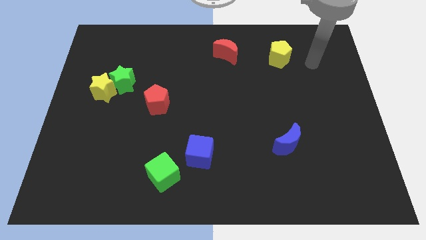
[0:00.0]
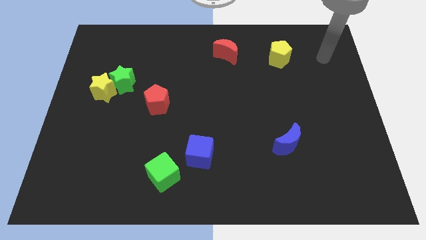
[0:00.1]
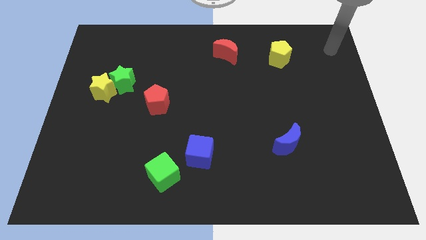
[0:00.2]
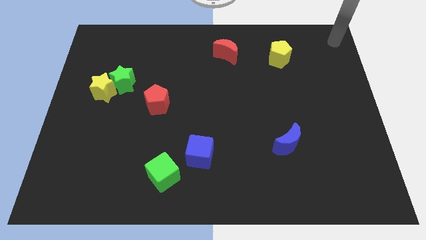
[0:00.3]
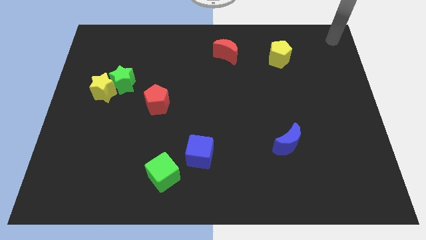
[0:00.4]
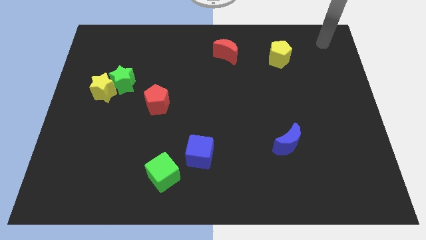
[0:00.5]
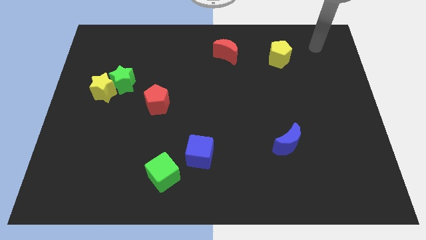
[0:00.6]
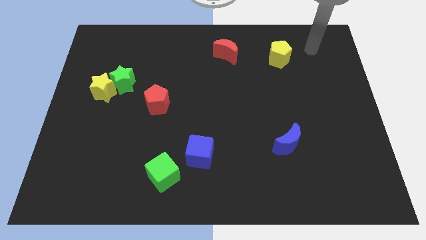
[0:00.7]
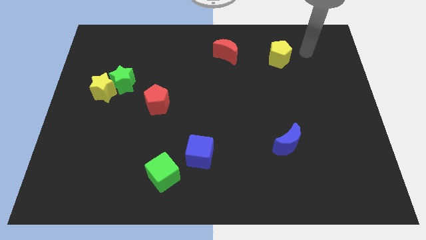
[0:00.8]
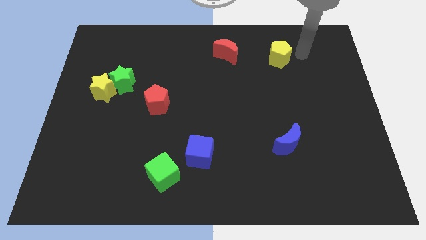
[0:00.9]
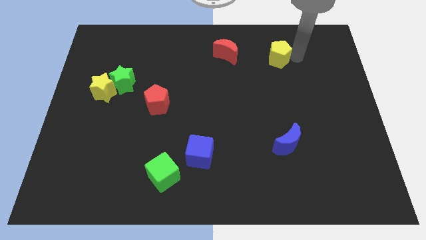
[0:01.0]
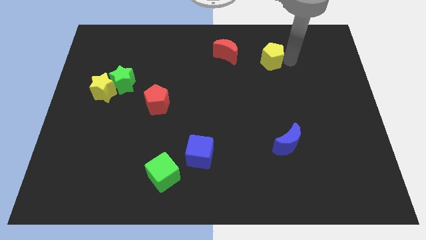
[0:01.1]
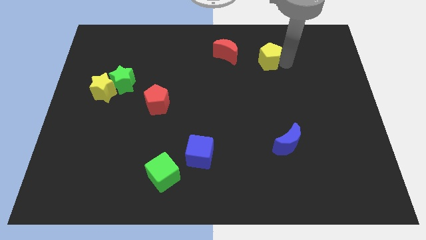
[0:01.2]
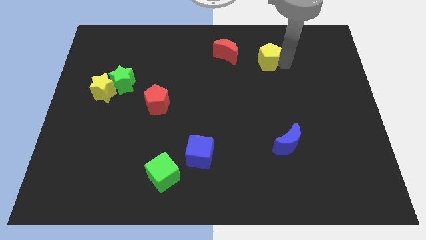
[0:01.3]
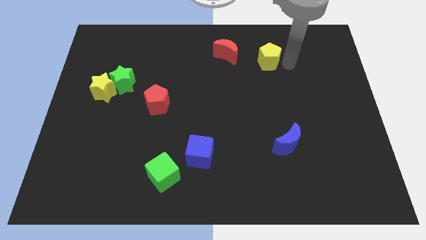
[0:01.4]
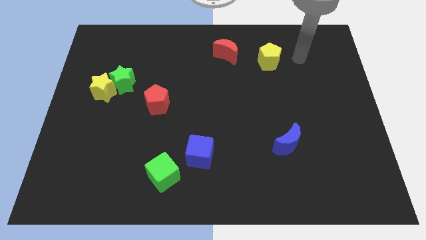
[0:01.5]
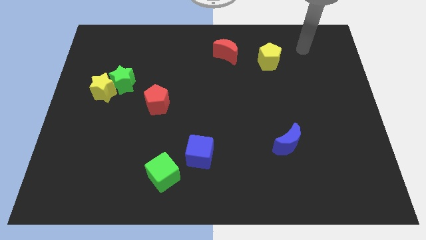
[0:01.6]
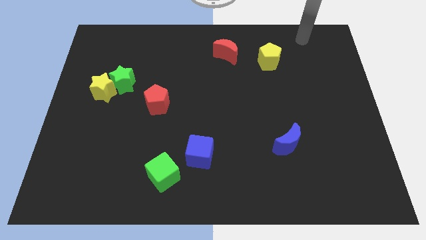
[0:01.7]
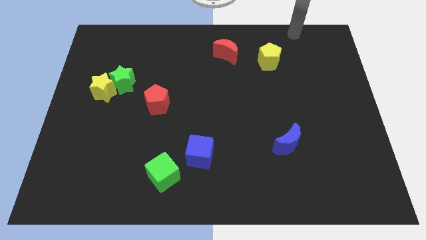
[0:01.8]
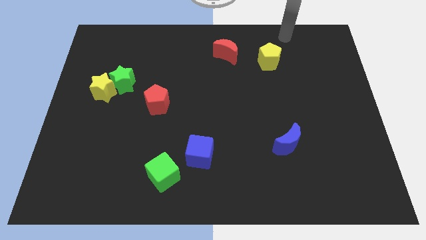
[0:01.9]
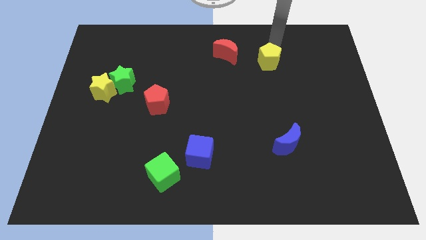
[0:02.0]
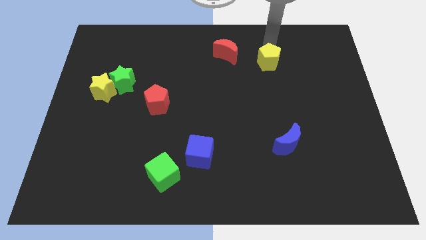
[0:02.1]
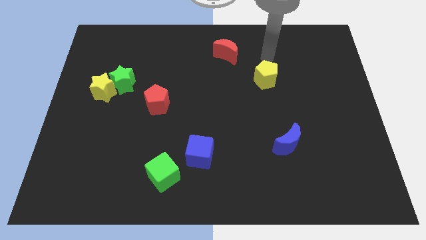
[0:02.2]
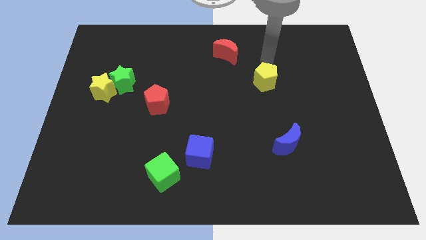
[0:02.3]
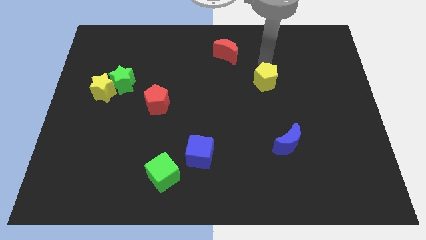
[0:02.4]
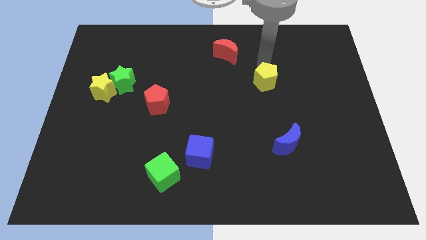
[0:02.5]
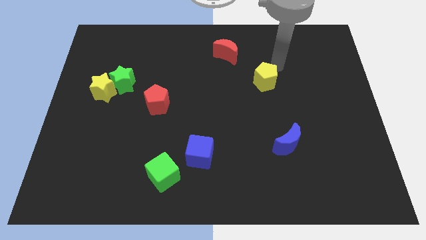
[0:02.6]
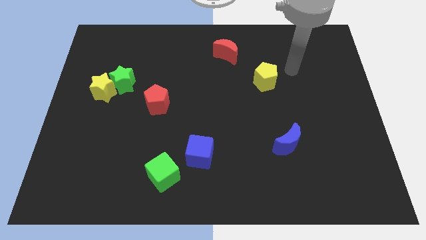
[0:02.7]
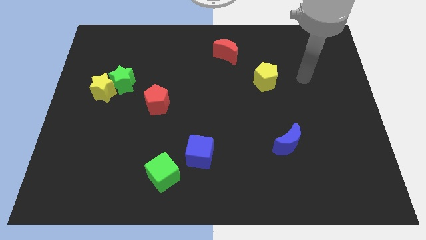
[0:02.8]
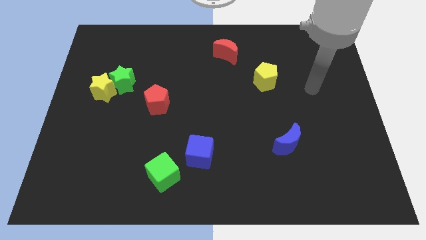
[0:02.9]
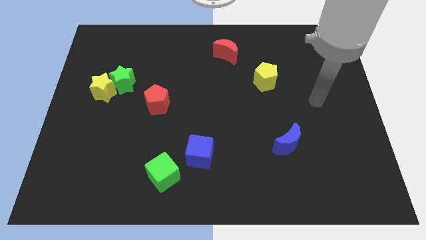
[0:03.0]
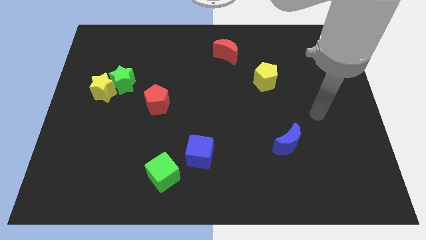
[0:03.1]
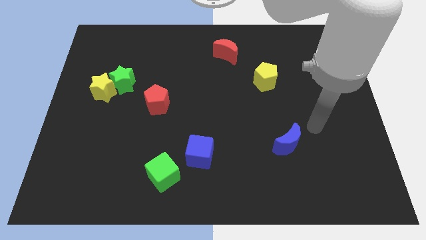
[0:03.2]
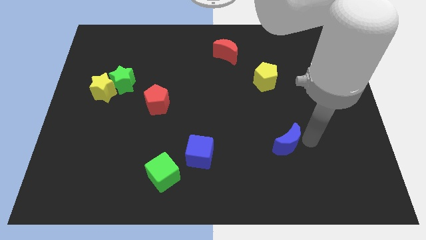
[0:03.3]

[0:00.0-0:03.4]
push yellow pentagon to its downwards

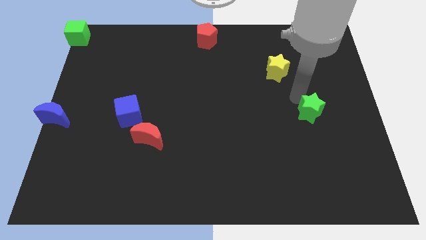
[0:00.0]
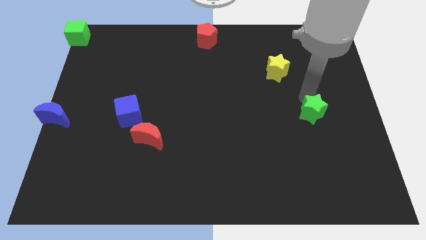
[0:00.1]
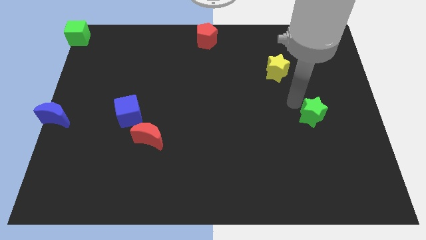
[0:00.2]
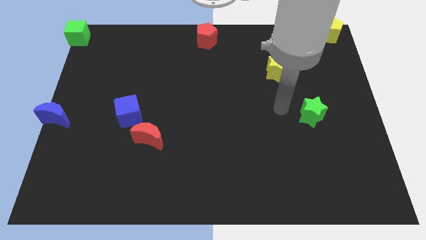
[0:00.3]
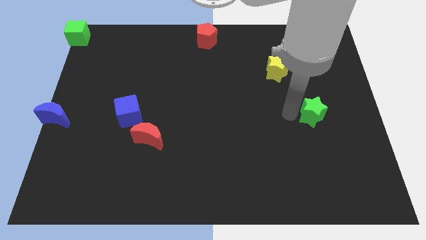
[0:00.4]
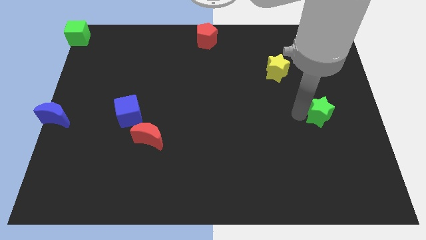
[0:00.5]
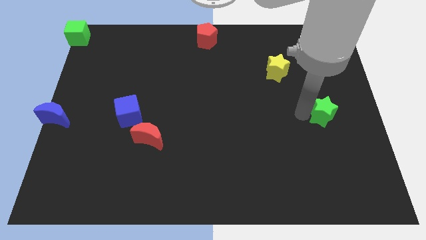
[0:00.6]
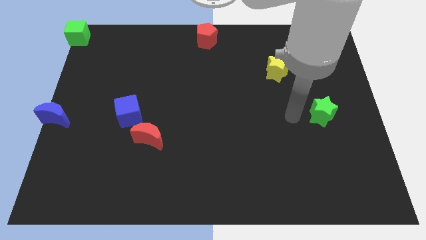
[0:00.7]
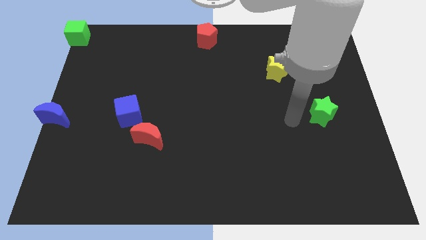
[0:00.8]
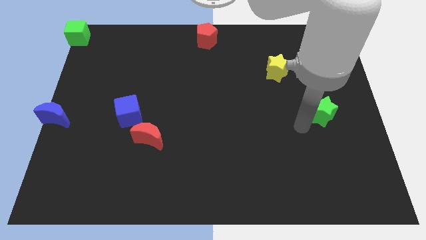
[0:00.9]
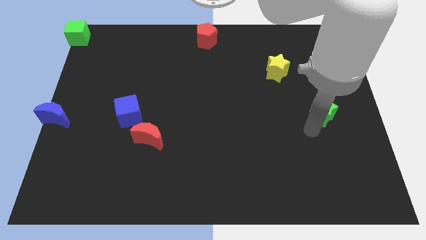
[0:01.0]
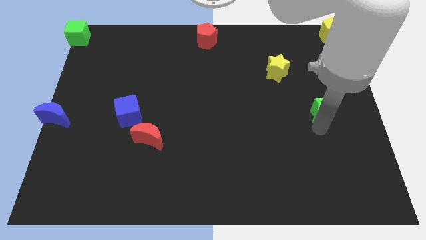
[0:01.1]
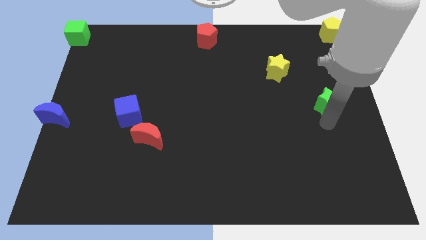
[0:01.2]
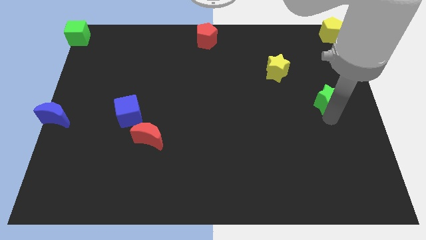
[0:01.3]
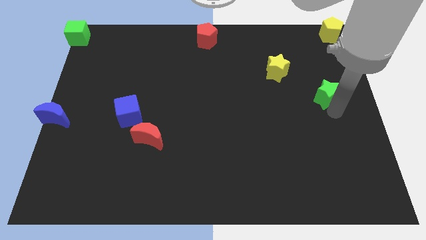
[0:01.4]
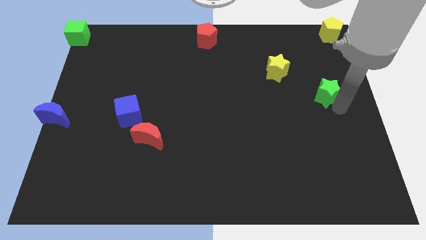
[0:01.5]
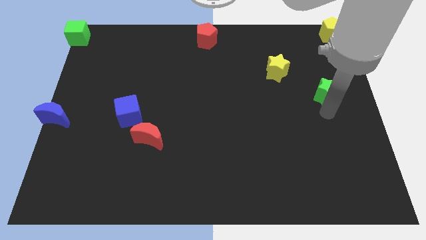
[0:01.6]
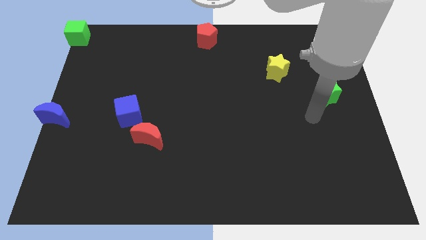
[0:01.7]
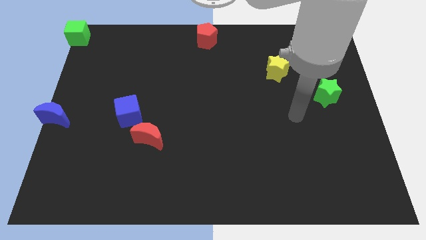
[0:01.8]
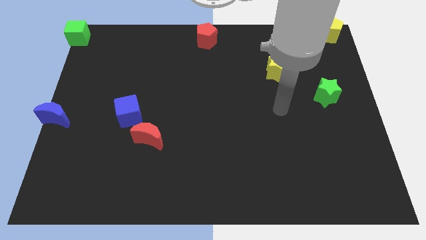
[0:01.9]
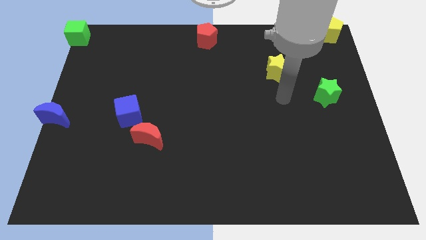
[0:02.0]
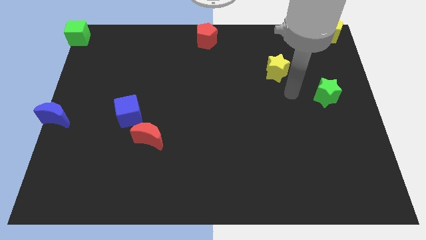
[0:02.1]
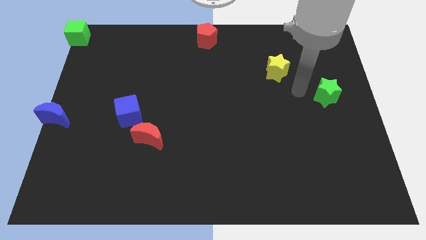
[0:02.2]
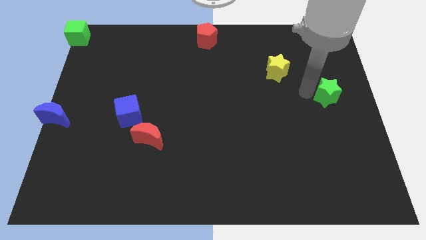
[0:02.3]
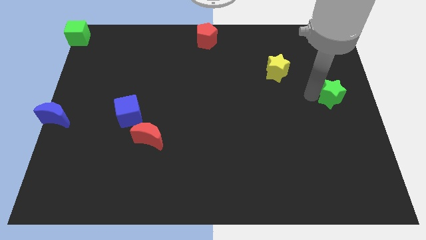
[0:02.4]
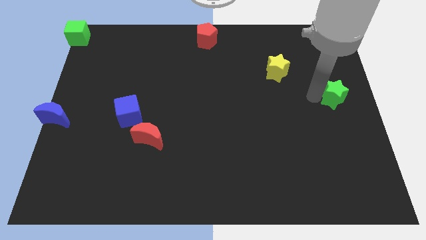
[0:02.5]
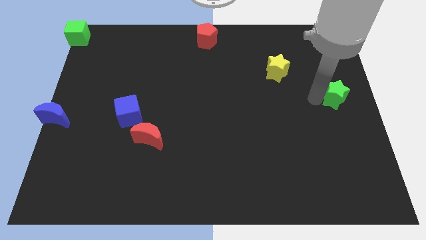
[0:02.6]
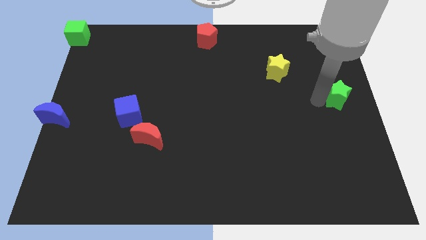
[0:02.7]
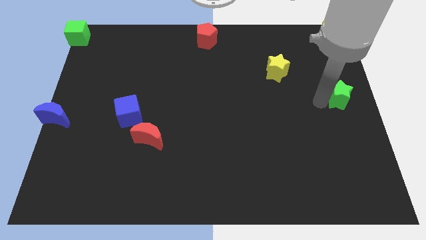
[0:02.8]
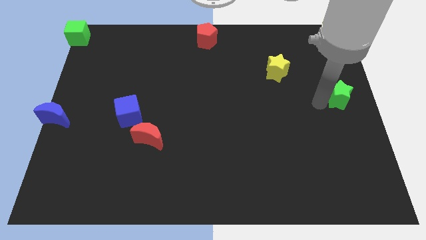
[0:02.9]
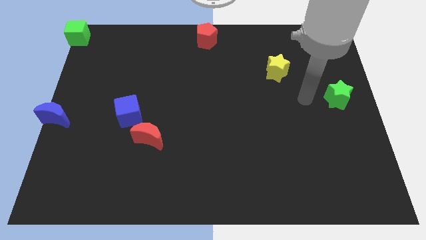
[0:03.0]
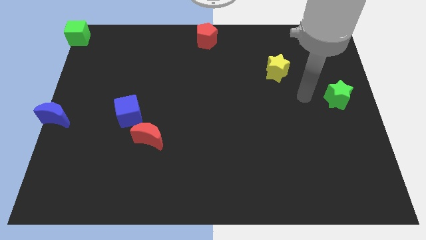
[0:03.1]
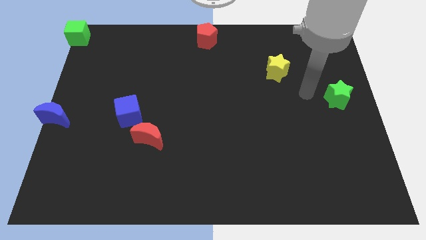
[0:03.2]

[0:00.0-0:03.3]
place green star below yellow pentagon

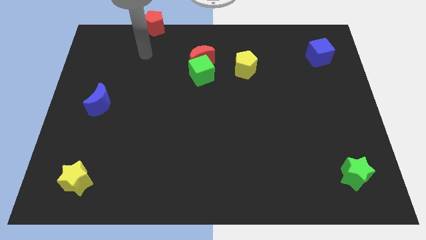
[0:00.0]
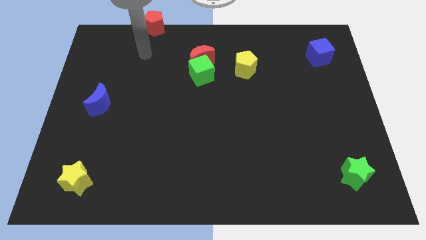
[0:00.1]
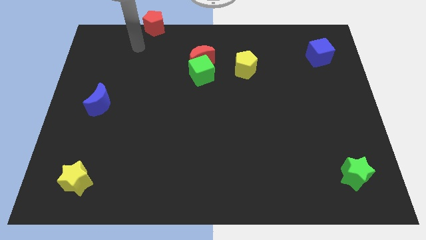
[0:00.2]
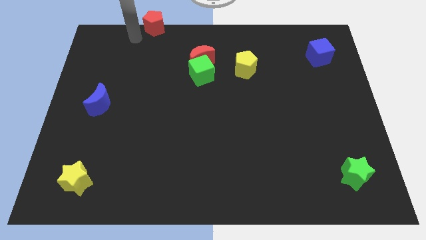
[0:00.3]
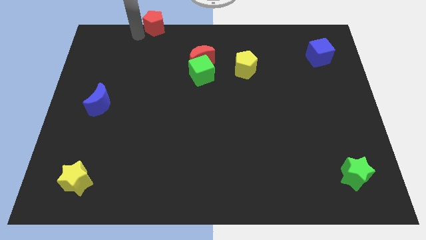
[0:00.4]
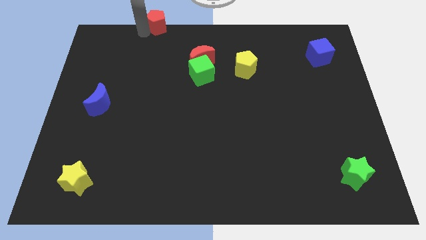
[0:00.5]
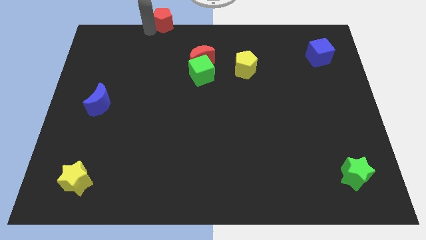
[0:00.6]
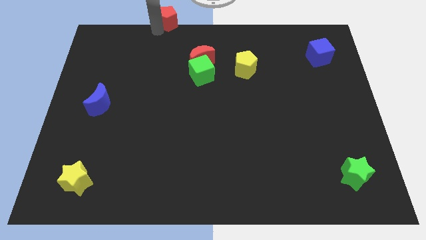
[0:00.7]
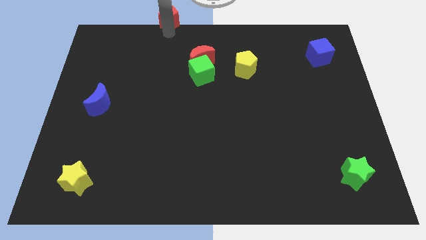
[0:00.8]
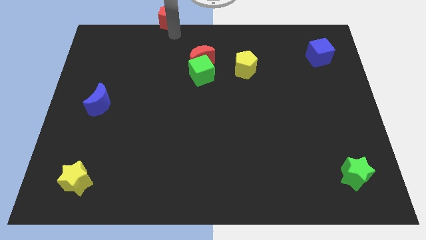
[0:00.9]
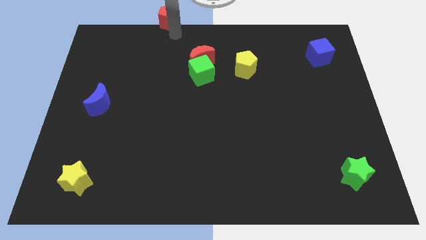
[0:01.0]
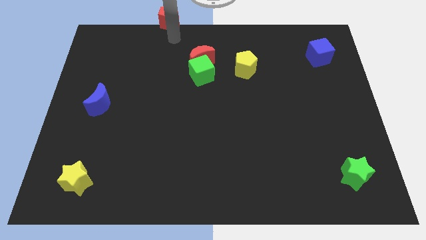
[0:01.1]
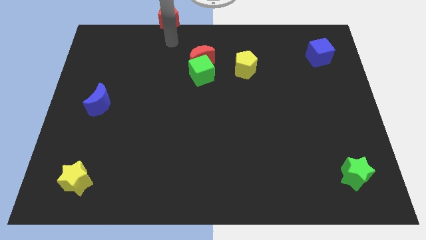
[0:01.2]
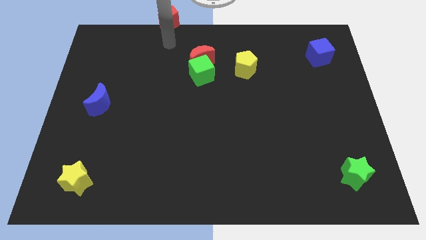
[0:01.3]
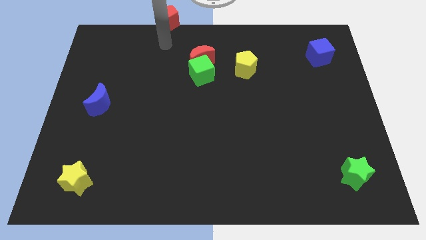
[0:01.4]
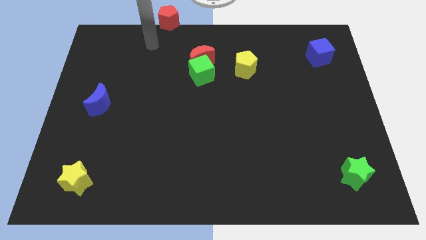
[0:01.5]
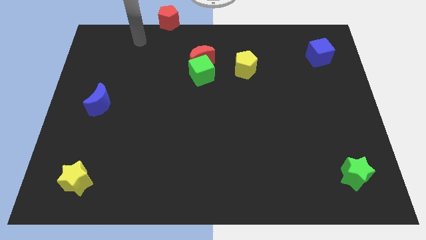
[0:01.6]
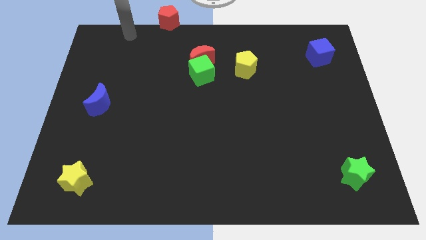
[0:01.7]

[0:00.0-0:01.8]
push the red pentagon diagonally left to the red moon

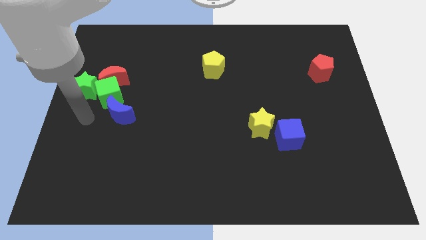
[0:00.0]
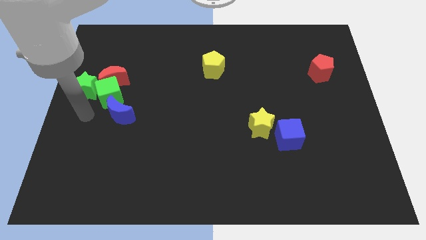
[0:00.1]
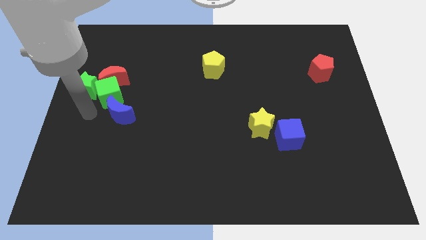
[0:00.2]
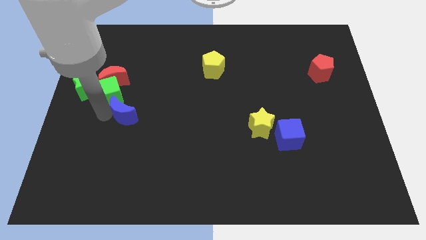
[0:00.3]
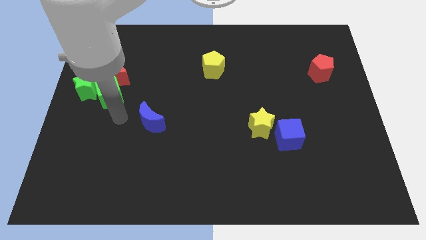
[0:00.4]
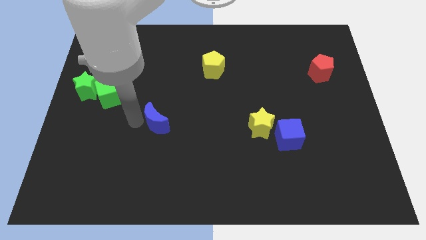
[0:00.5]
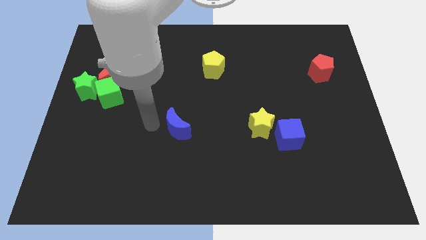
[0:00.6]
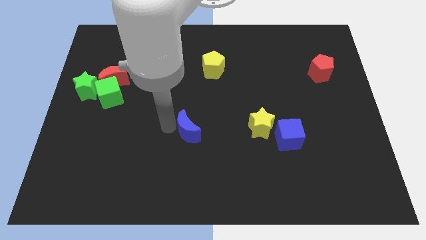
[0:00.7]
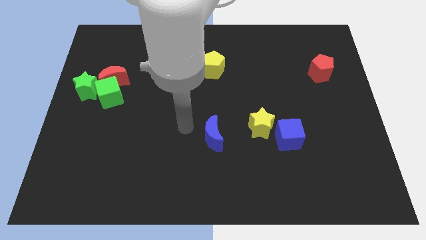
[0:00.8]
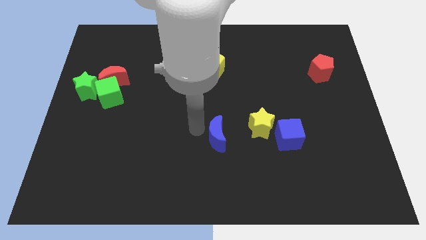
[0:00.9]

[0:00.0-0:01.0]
push the blue moon away from the green cube
